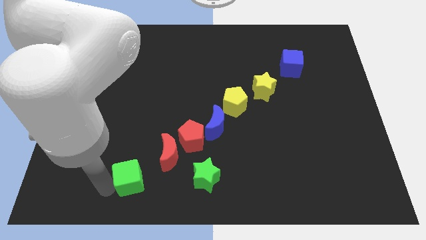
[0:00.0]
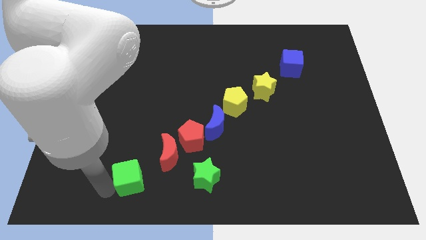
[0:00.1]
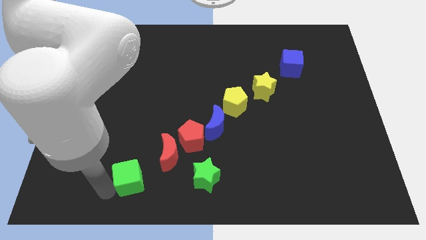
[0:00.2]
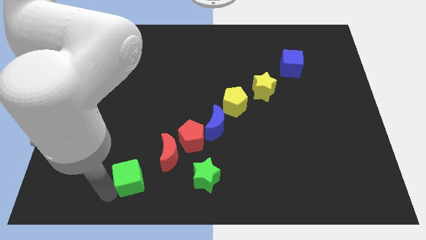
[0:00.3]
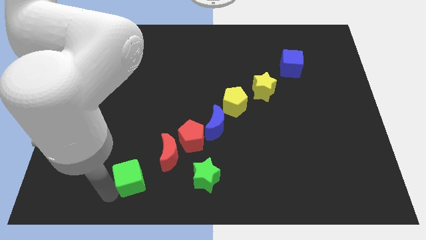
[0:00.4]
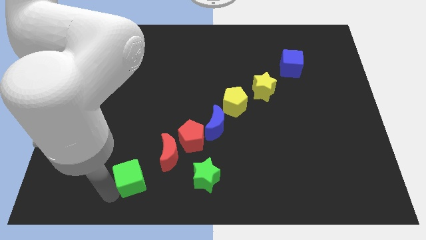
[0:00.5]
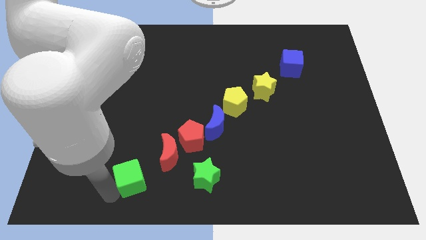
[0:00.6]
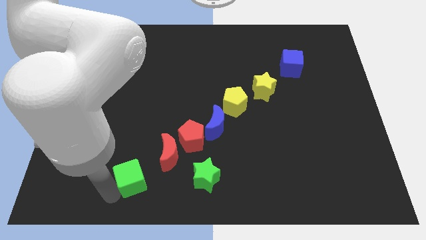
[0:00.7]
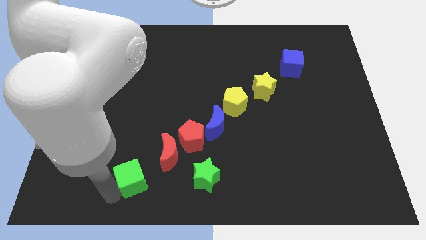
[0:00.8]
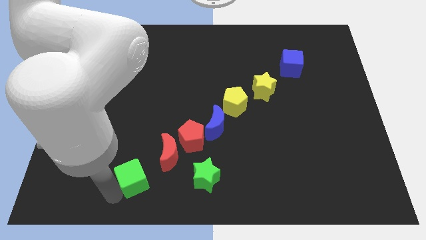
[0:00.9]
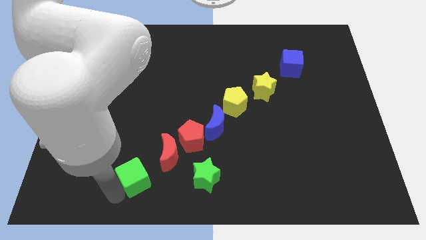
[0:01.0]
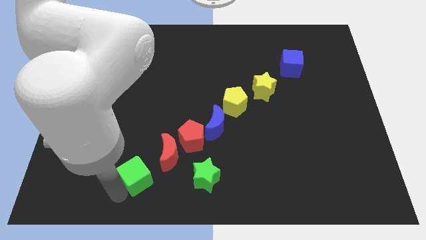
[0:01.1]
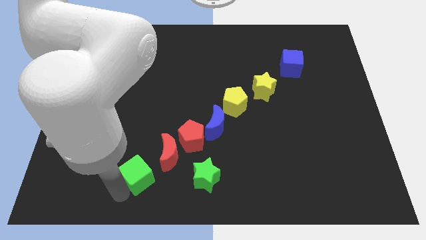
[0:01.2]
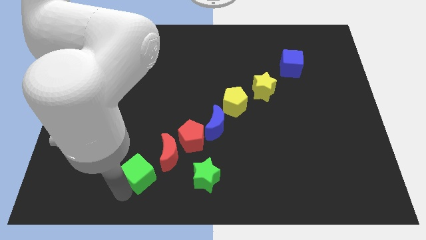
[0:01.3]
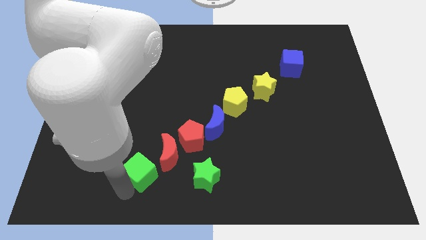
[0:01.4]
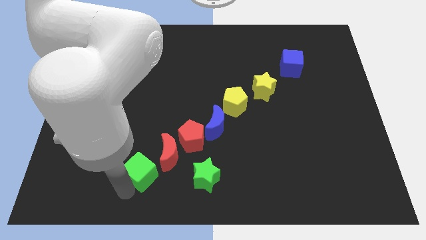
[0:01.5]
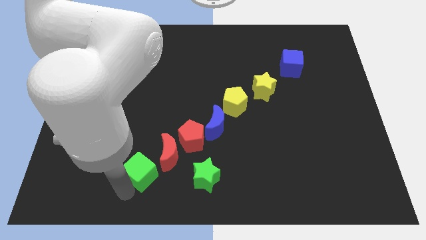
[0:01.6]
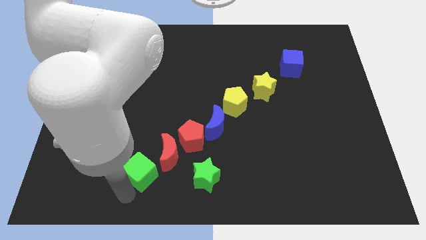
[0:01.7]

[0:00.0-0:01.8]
move green cube towards red crescent

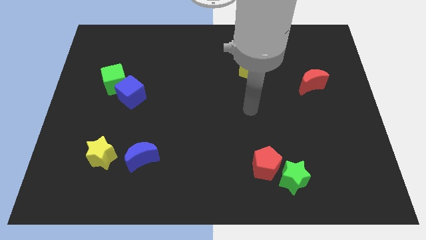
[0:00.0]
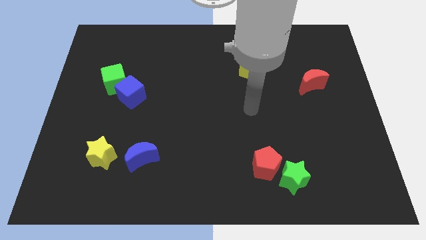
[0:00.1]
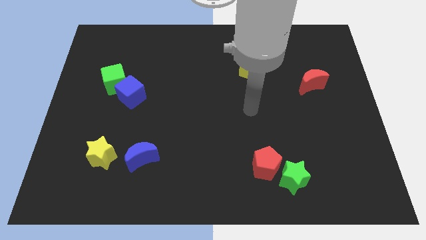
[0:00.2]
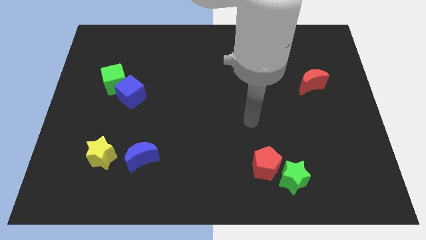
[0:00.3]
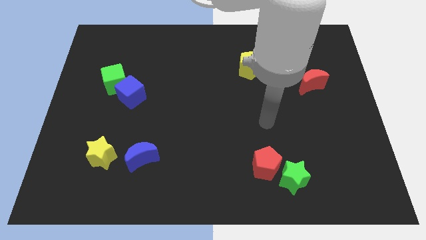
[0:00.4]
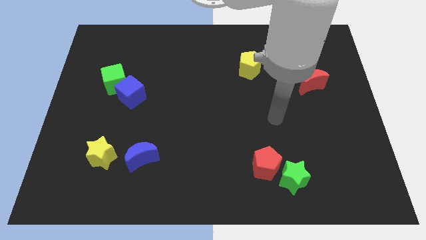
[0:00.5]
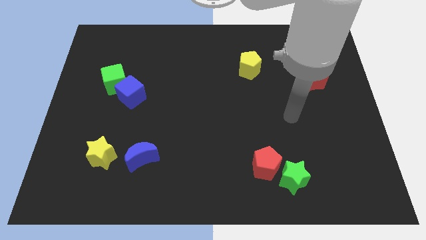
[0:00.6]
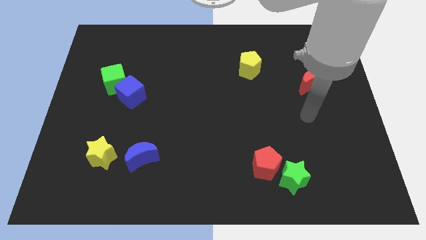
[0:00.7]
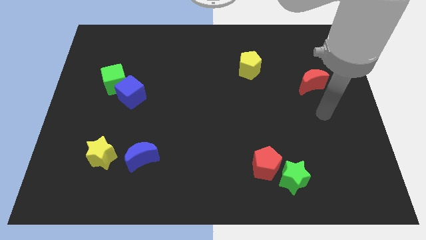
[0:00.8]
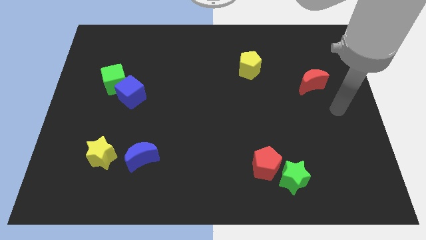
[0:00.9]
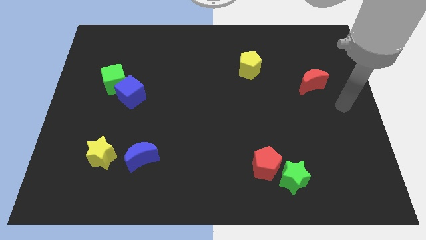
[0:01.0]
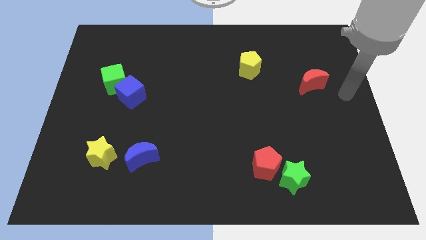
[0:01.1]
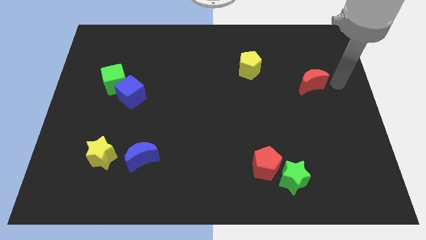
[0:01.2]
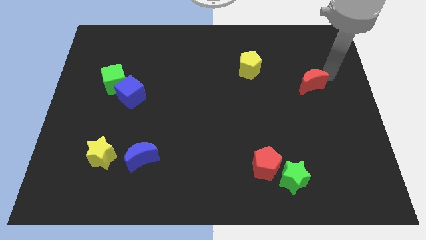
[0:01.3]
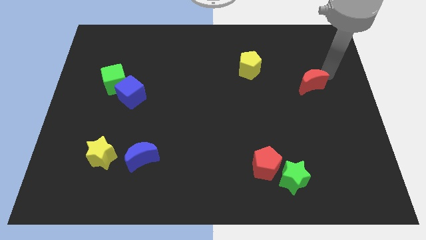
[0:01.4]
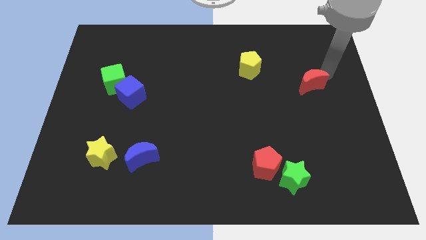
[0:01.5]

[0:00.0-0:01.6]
place your hand to the right of the red moon

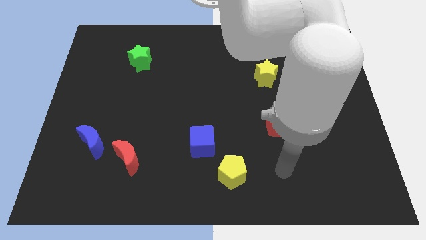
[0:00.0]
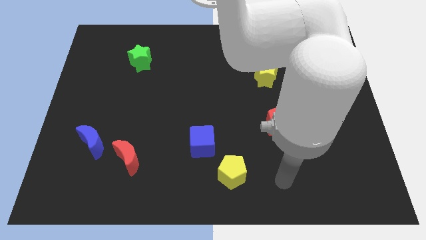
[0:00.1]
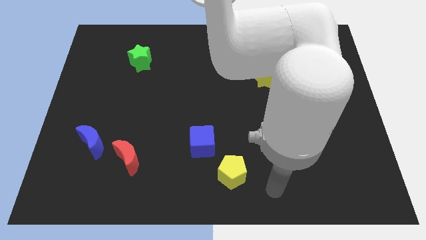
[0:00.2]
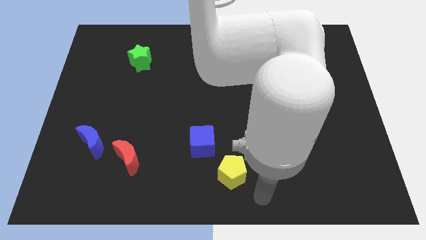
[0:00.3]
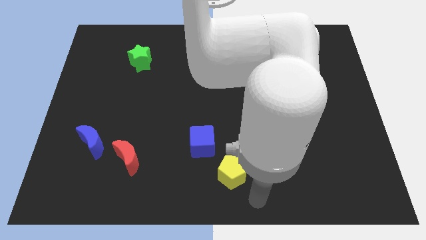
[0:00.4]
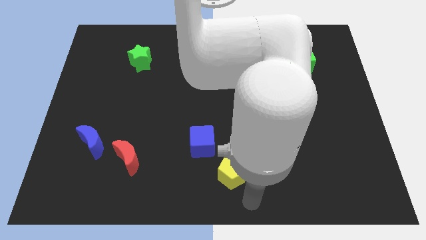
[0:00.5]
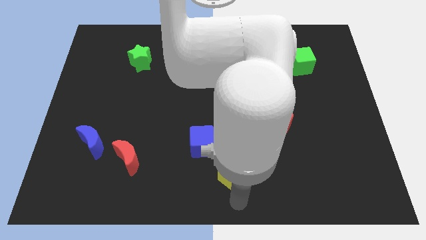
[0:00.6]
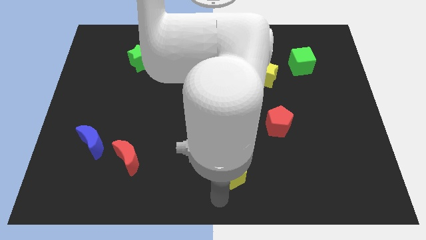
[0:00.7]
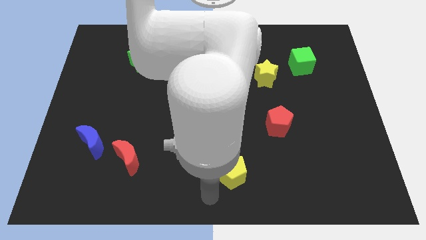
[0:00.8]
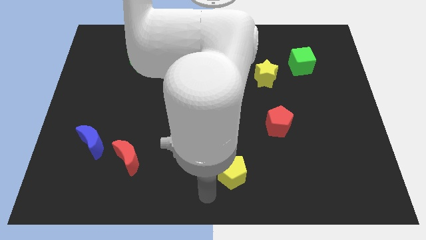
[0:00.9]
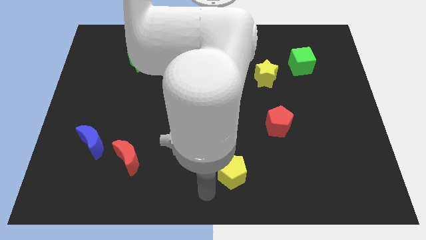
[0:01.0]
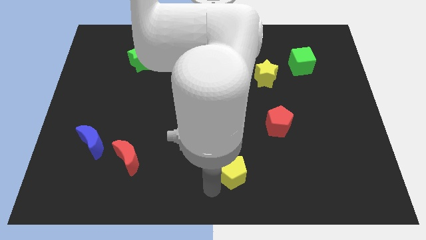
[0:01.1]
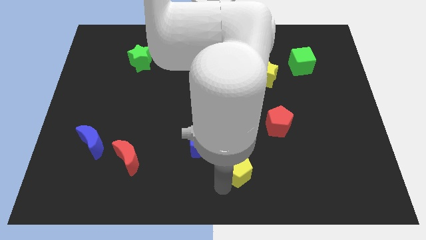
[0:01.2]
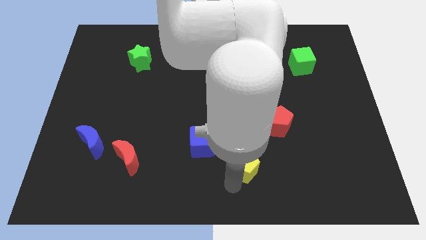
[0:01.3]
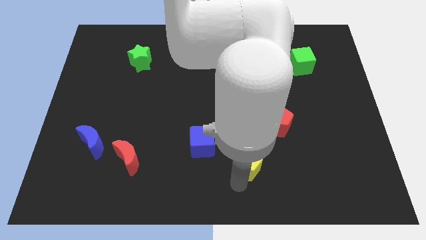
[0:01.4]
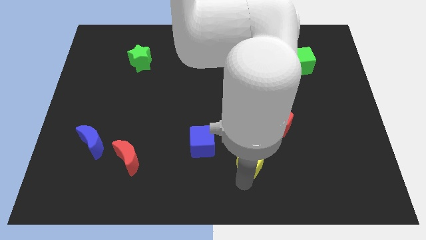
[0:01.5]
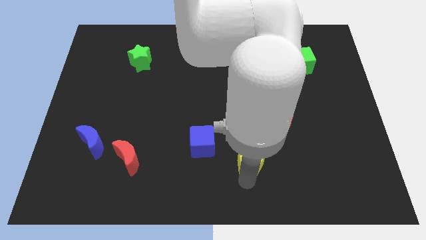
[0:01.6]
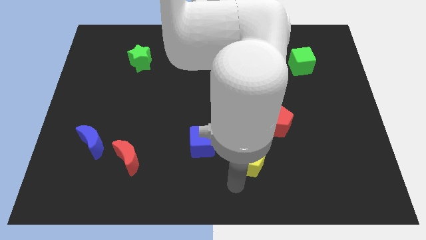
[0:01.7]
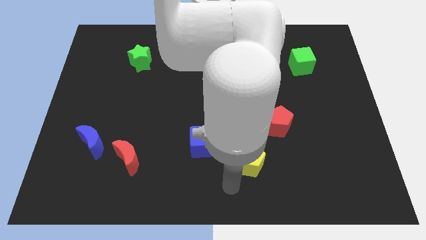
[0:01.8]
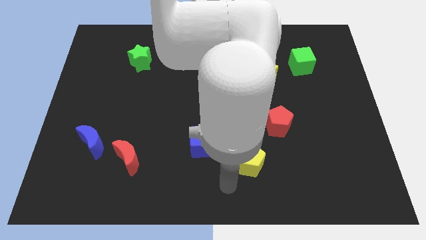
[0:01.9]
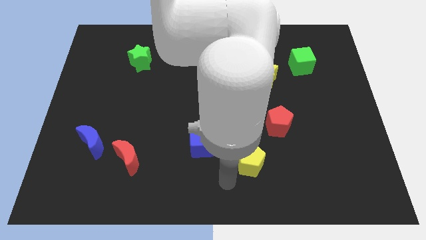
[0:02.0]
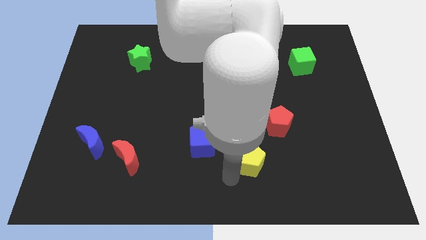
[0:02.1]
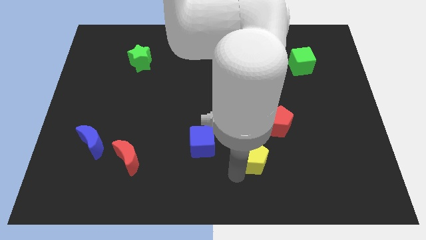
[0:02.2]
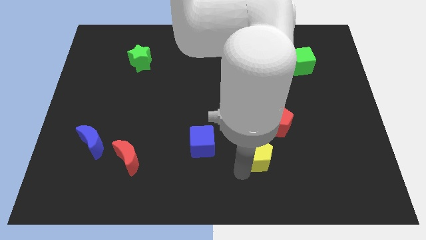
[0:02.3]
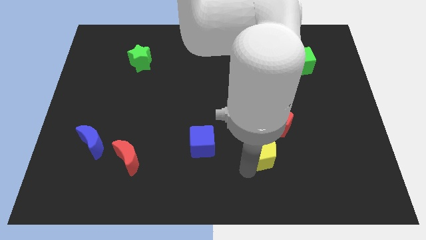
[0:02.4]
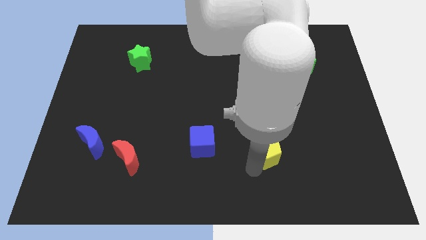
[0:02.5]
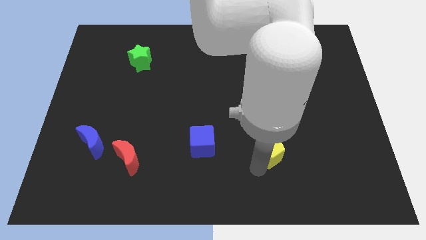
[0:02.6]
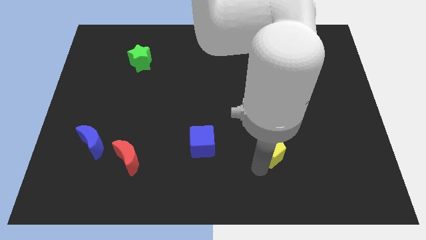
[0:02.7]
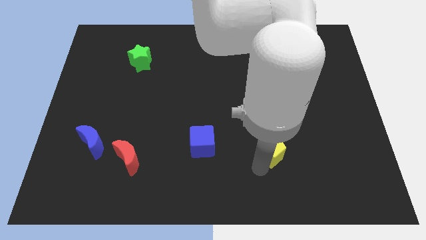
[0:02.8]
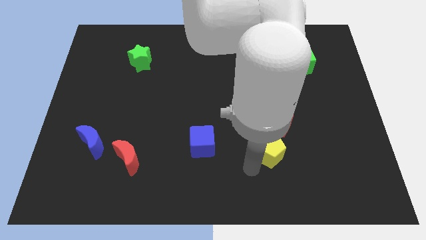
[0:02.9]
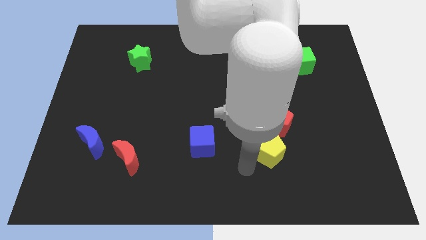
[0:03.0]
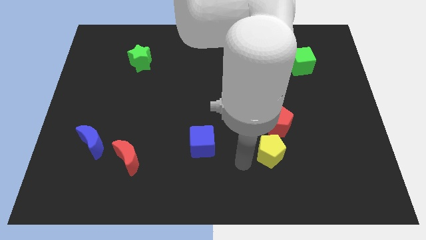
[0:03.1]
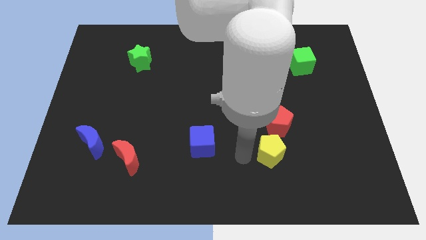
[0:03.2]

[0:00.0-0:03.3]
place the yellow pentagon under red pentagon

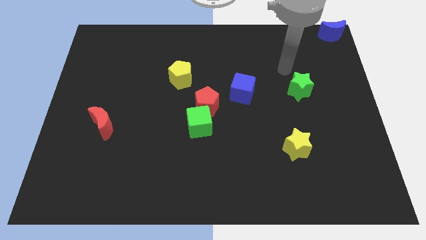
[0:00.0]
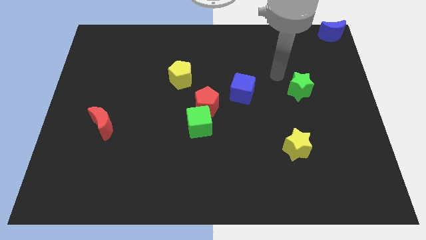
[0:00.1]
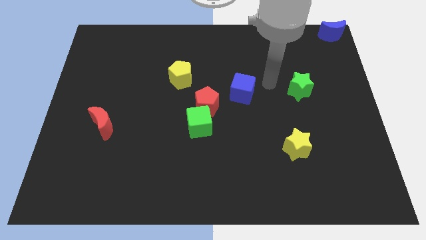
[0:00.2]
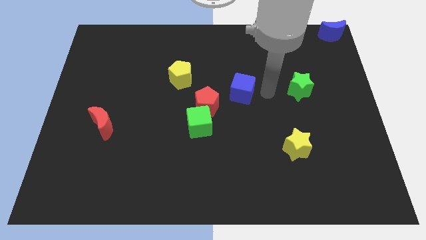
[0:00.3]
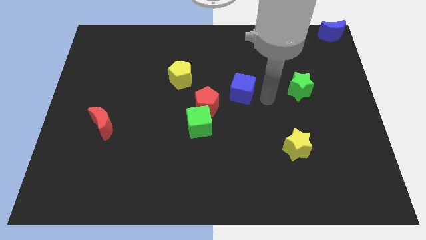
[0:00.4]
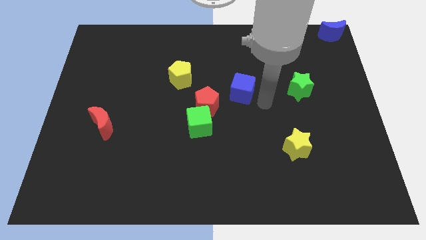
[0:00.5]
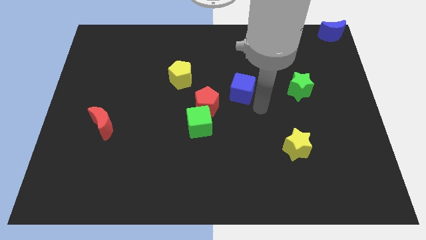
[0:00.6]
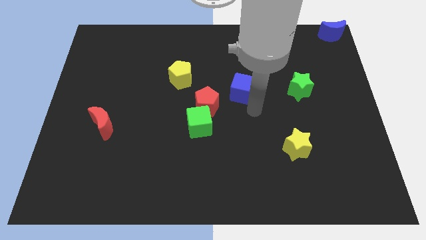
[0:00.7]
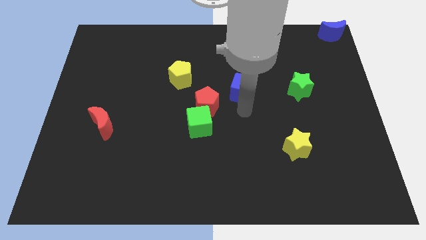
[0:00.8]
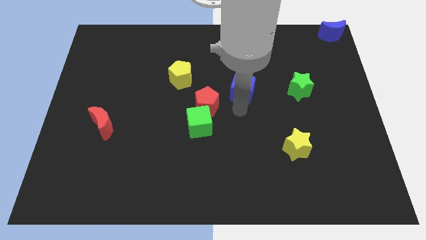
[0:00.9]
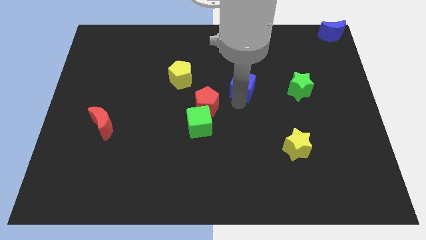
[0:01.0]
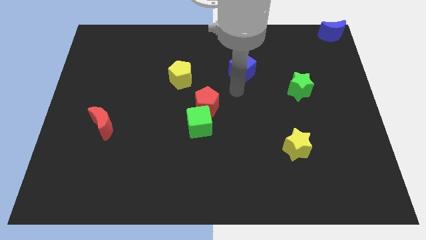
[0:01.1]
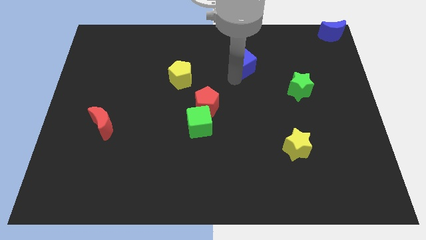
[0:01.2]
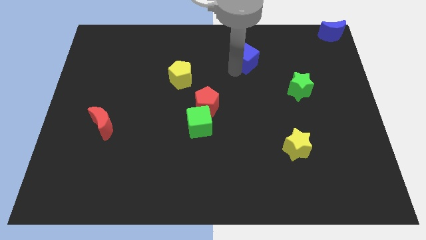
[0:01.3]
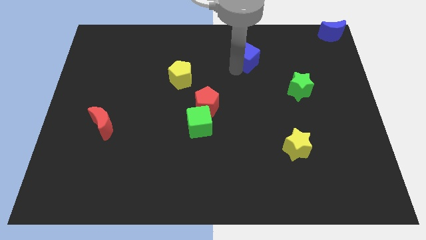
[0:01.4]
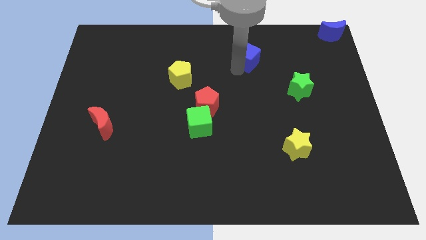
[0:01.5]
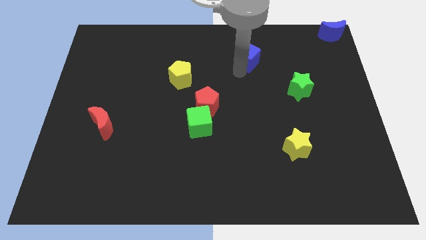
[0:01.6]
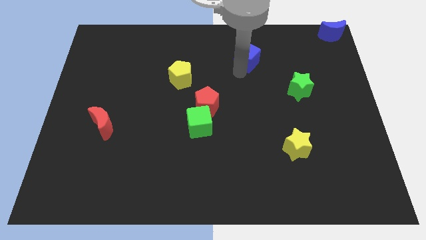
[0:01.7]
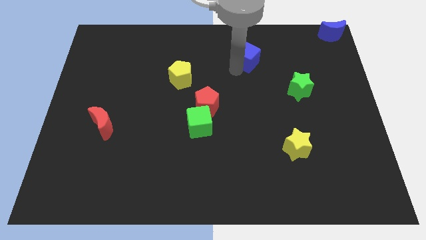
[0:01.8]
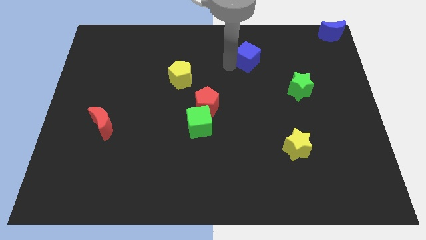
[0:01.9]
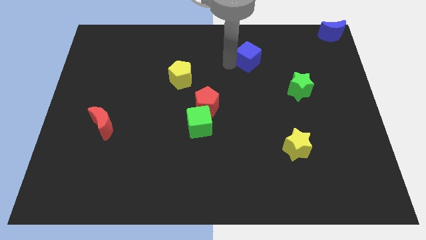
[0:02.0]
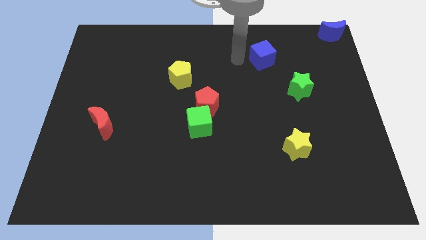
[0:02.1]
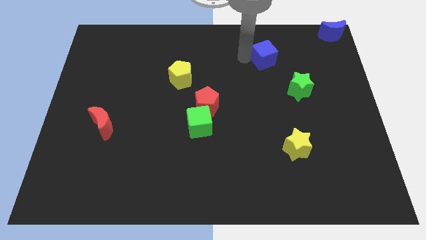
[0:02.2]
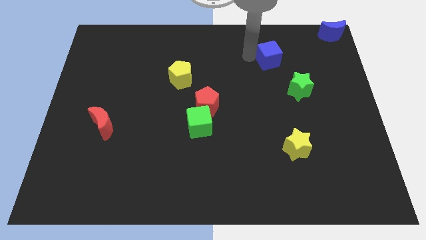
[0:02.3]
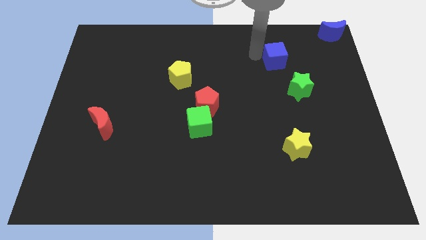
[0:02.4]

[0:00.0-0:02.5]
push the blue cube to the top left of the green star
